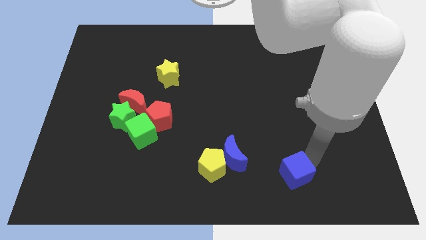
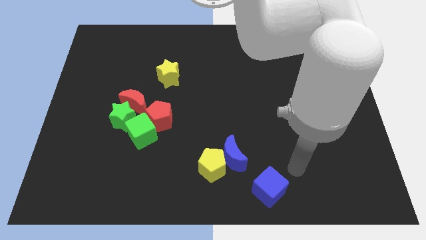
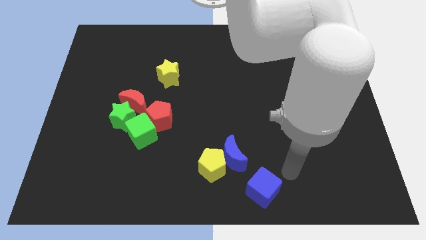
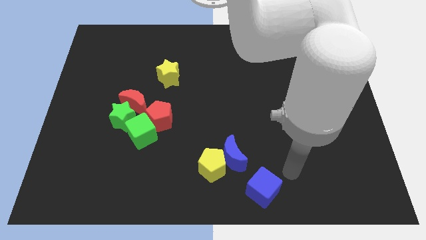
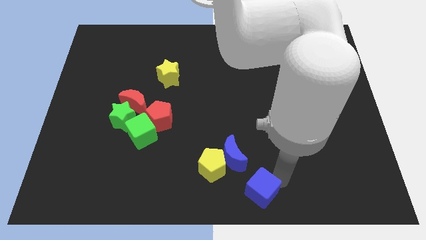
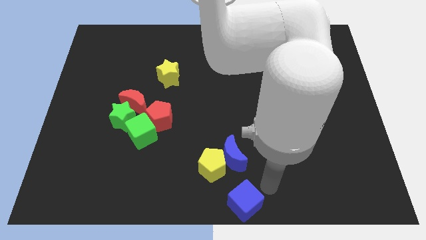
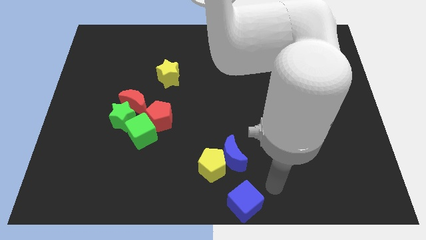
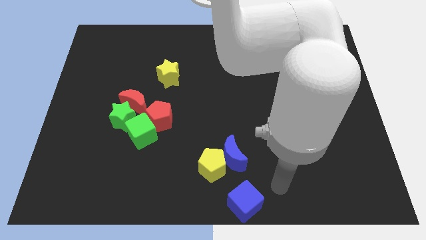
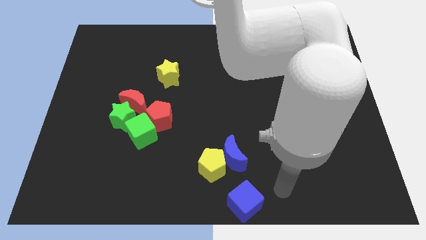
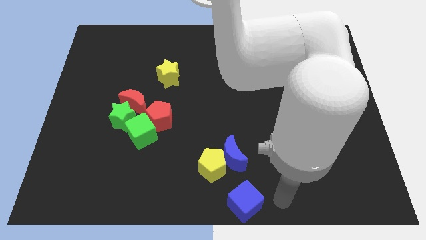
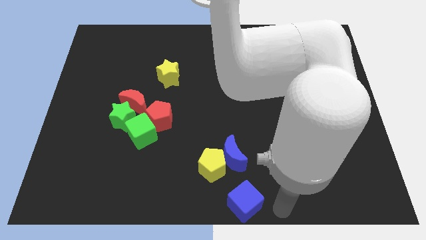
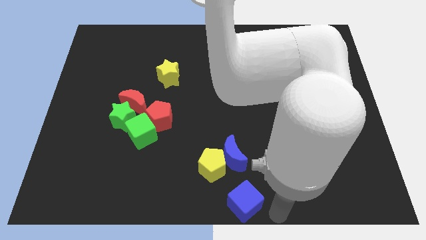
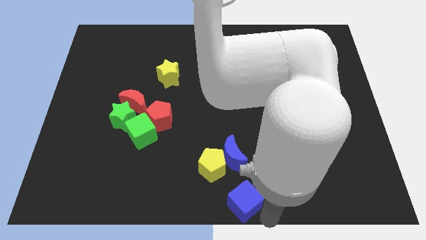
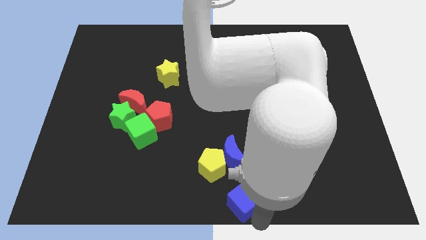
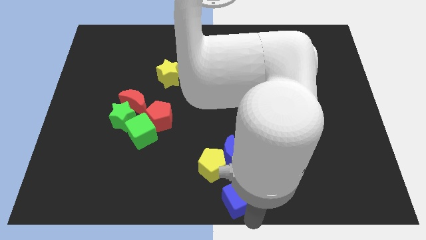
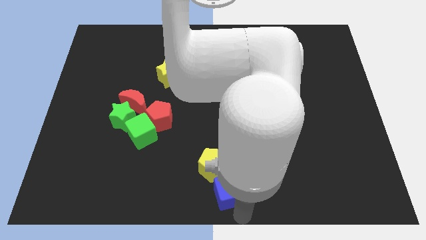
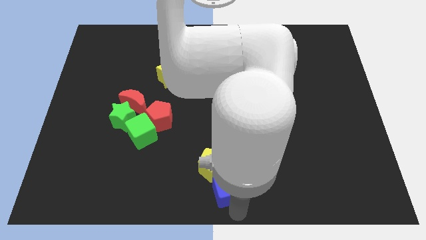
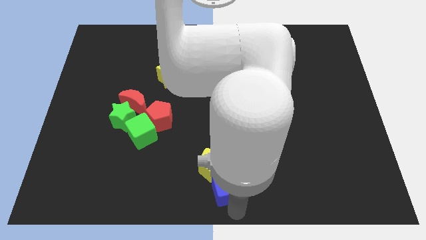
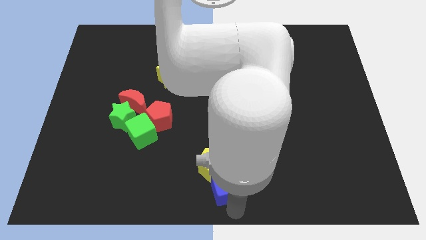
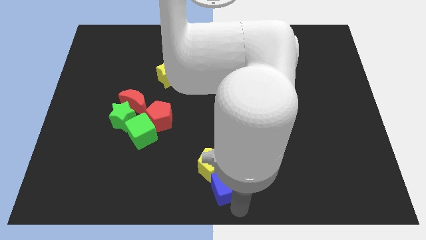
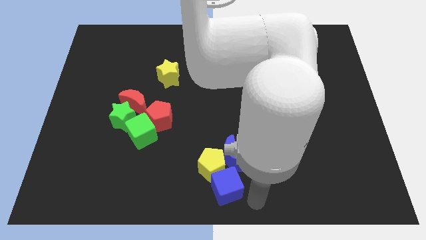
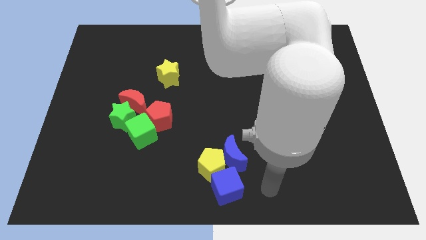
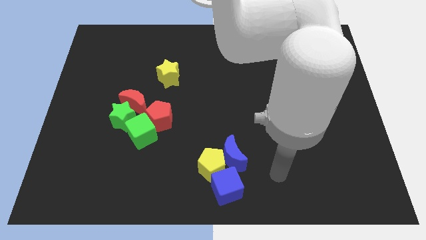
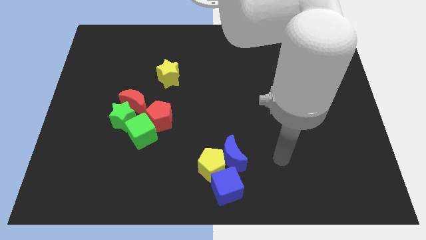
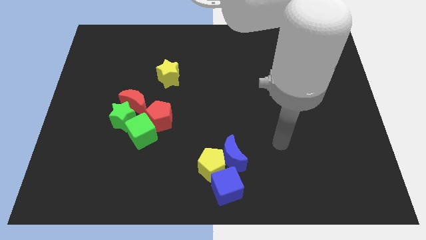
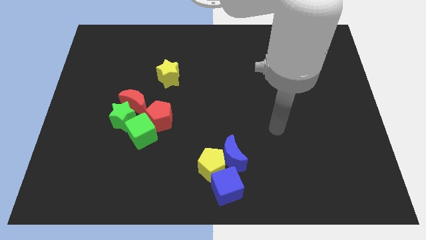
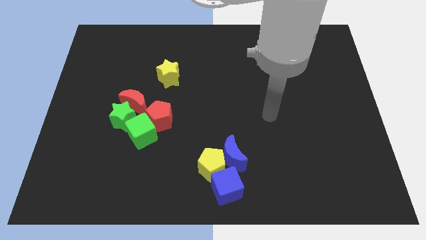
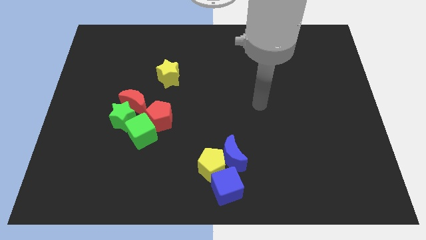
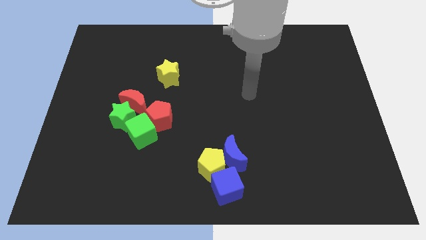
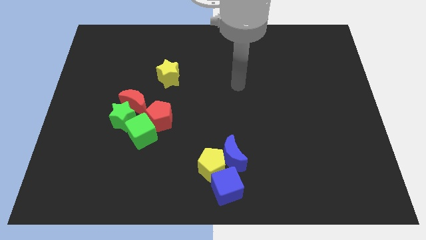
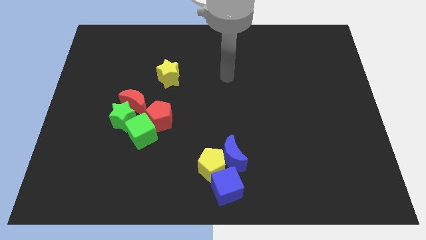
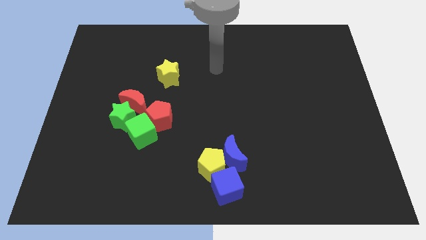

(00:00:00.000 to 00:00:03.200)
push the blue cube into the yellow pentagon

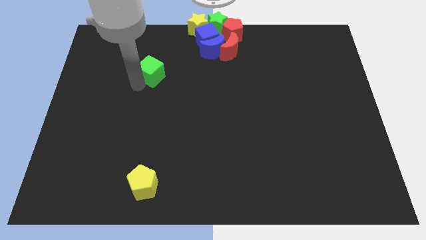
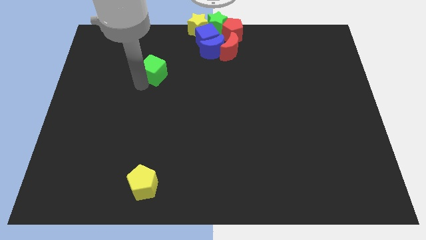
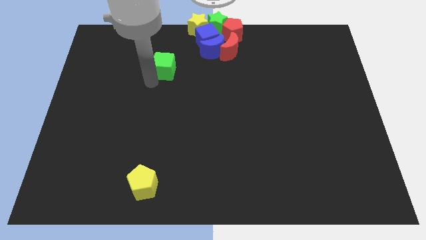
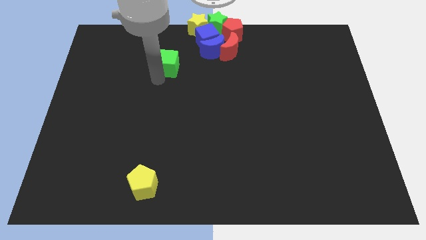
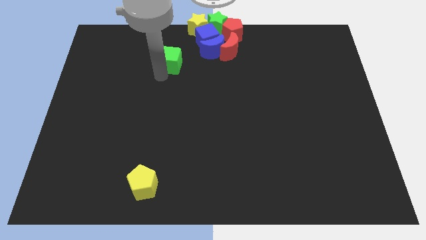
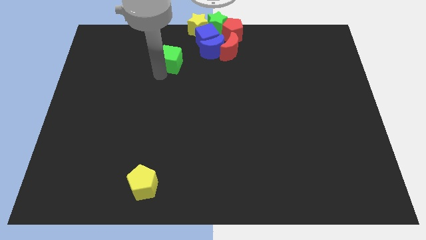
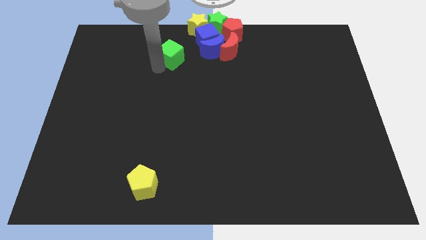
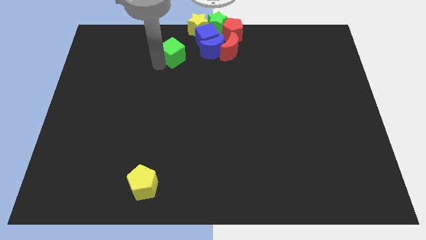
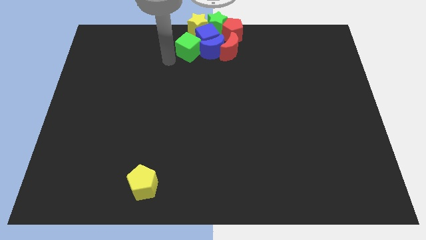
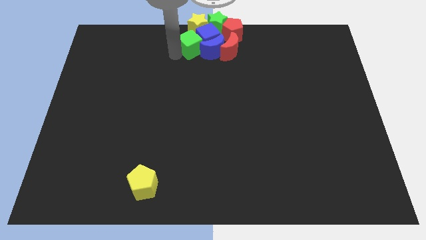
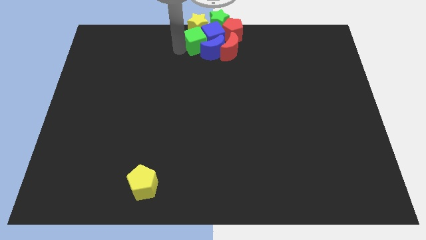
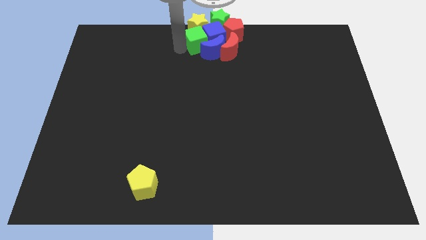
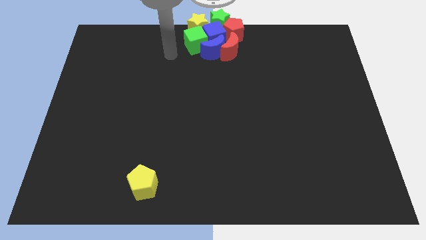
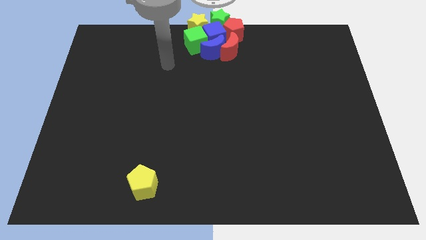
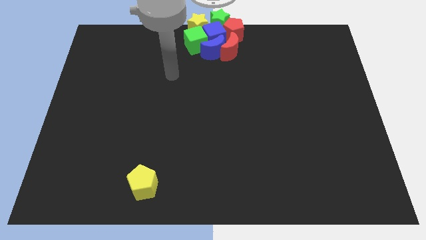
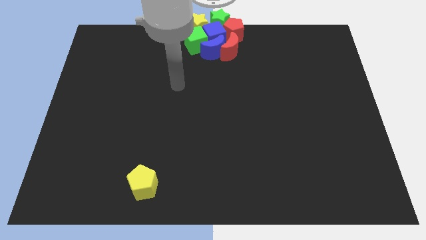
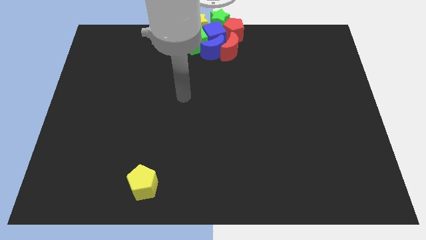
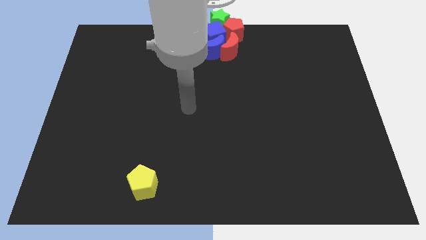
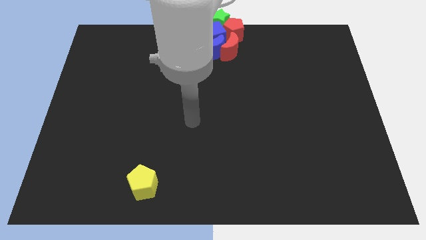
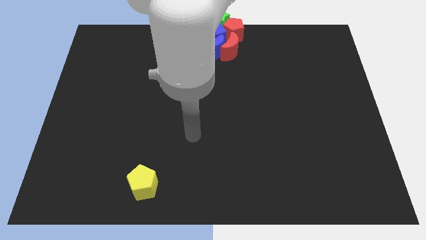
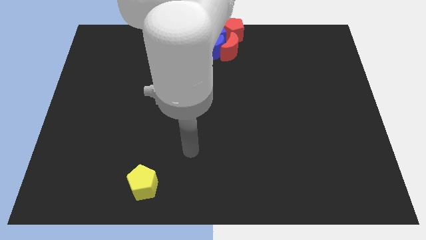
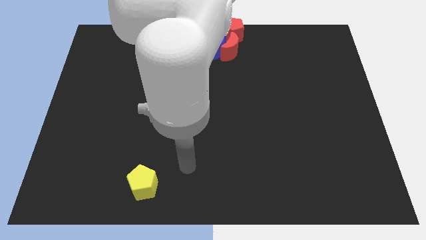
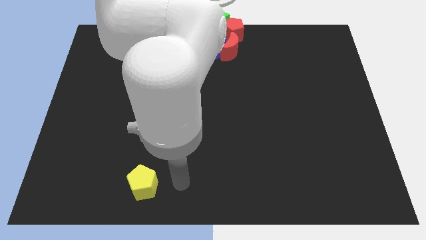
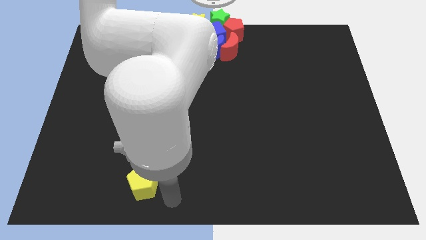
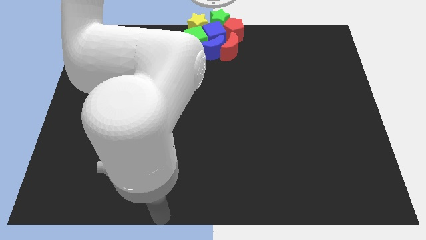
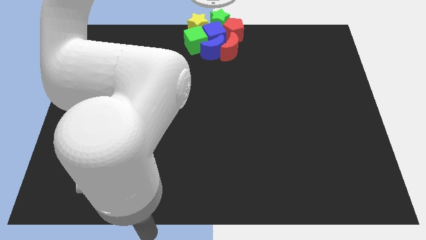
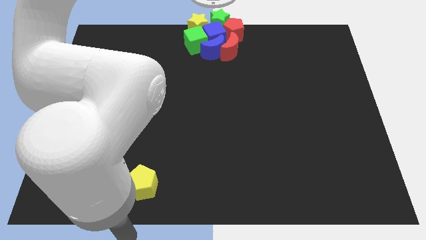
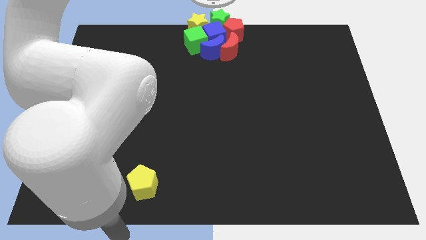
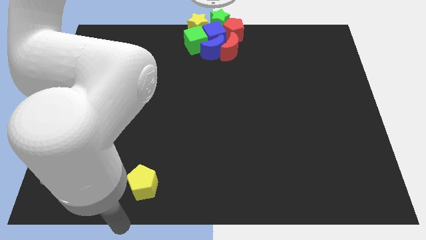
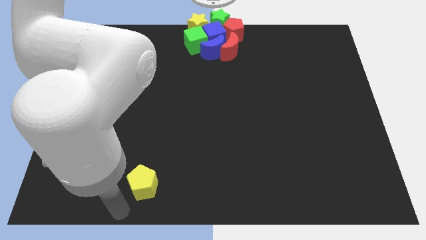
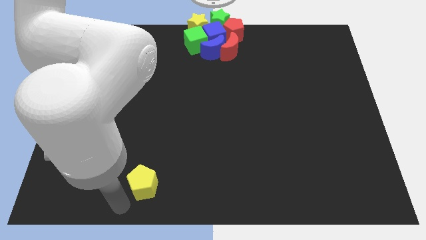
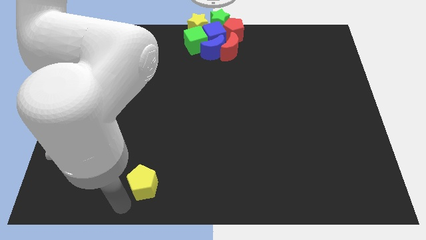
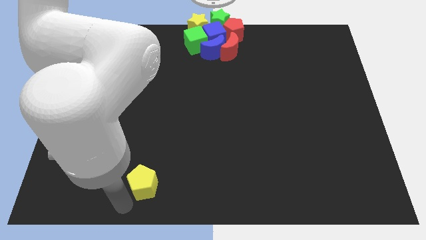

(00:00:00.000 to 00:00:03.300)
add the green cube to the group of blocks at the top center of the board

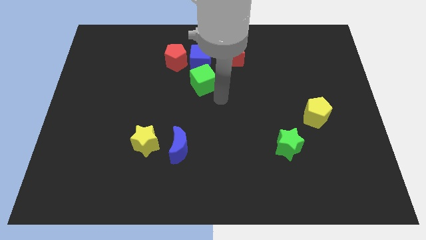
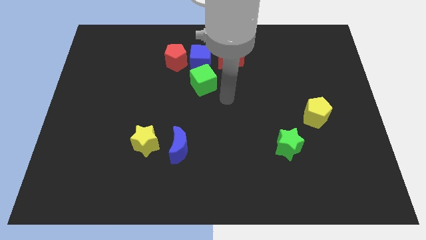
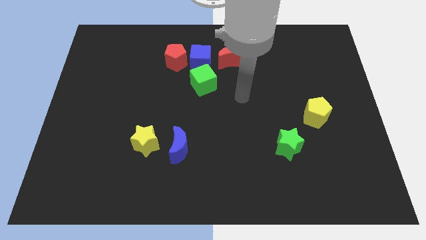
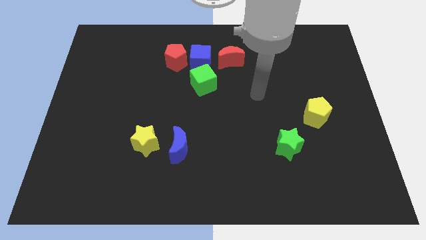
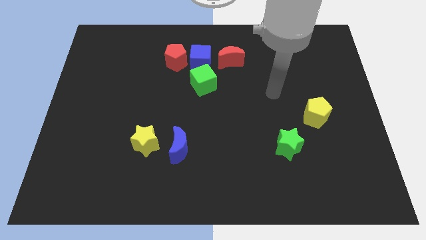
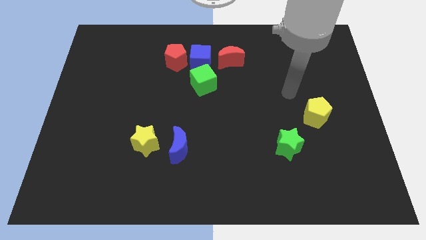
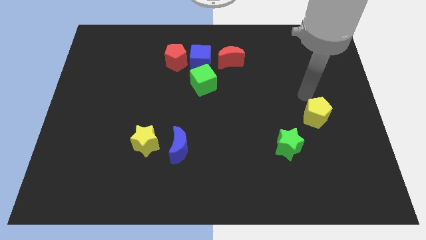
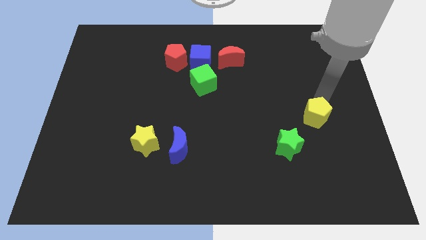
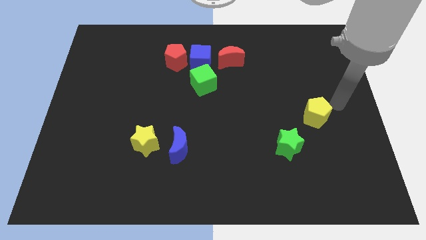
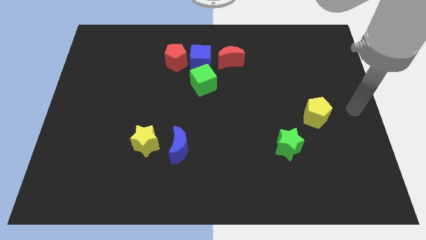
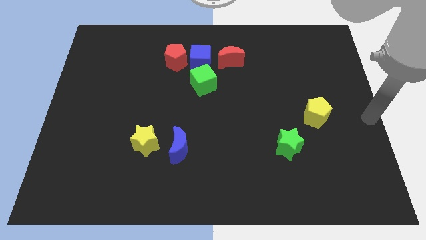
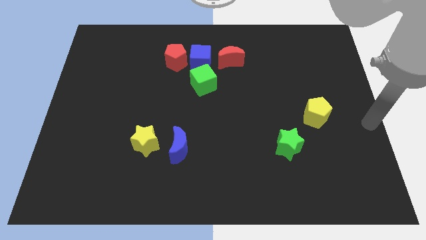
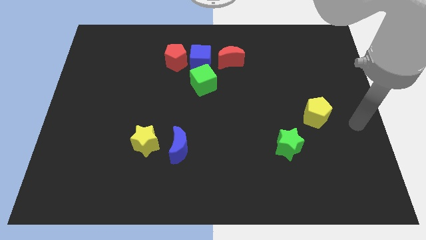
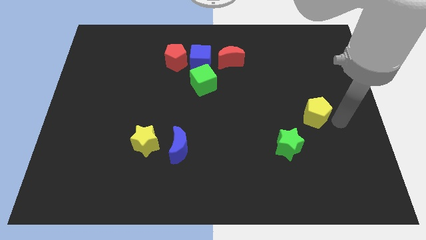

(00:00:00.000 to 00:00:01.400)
move your arm close to the right side of the yellow pentagon

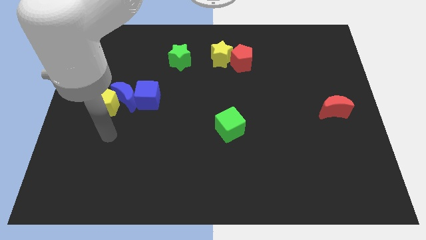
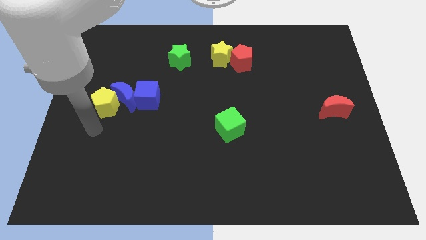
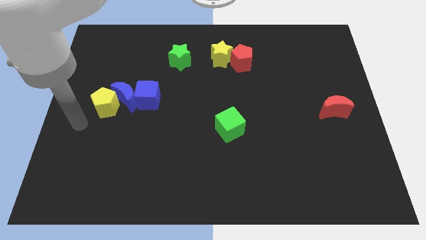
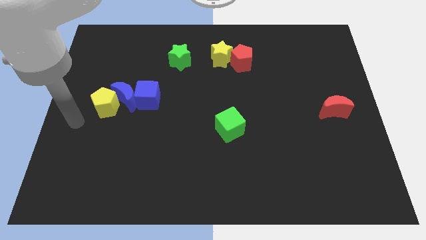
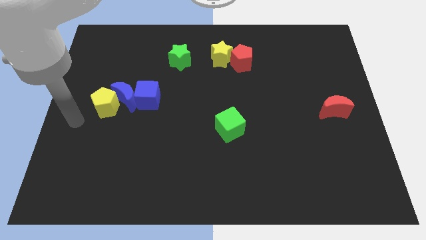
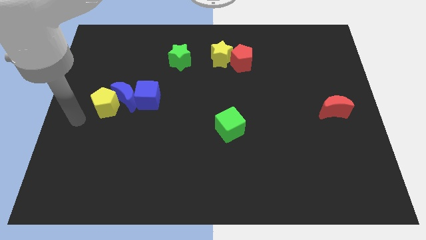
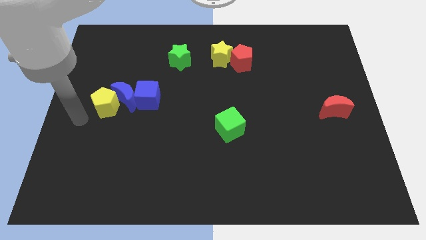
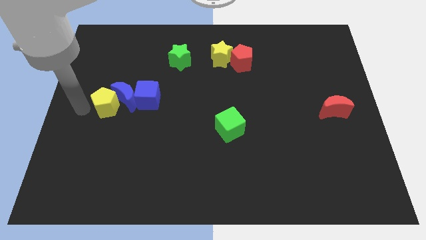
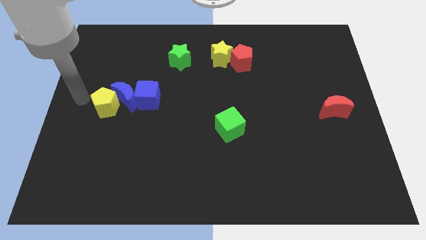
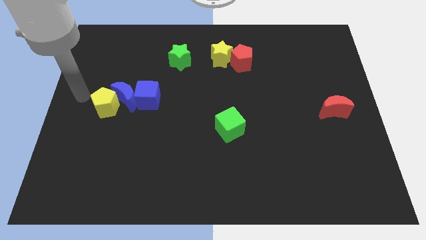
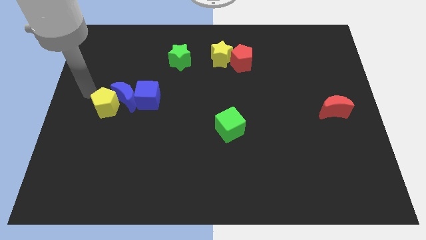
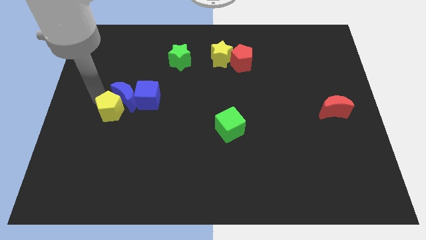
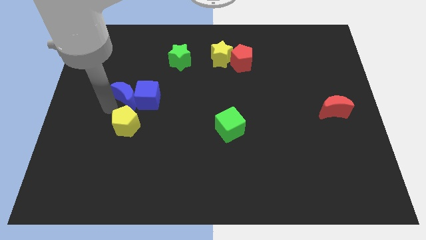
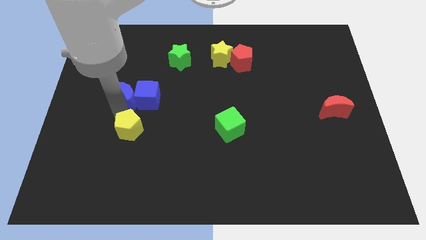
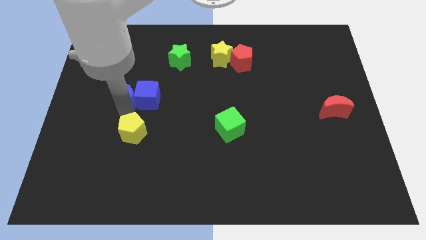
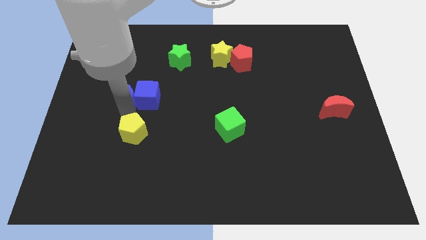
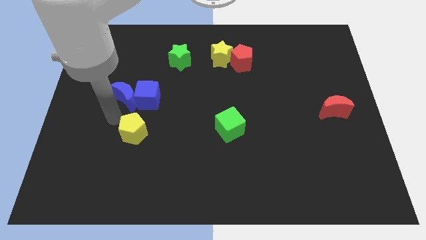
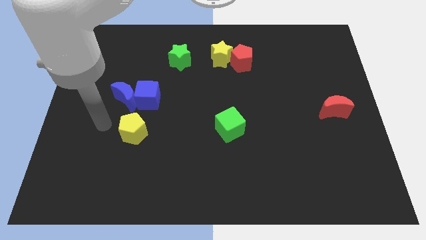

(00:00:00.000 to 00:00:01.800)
separate the yellow pentagon from the blue crescent
